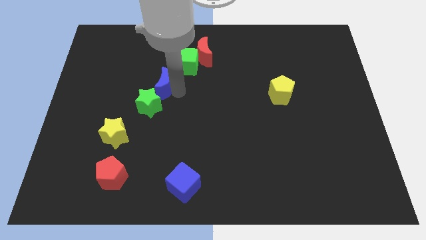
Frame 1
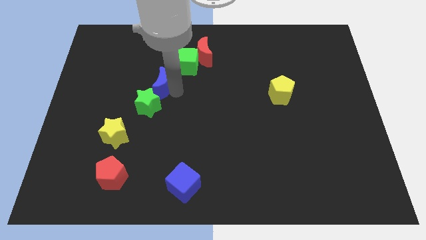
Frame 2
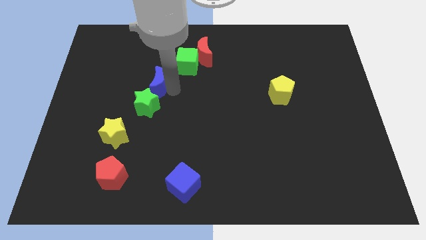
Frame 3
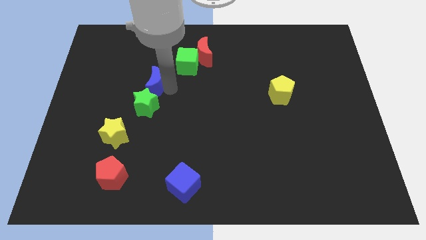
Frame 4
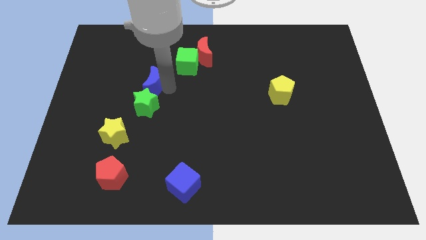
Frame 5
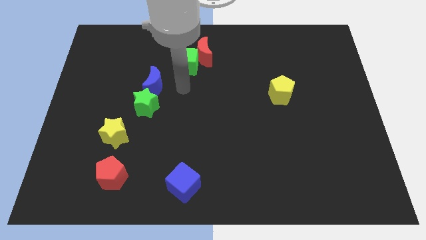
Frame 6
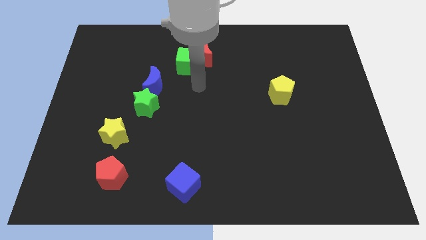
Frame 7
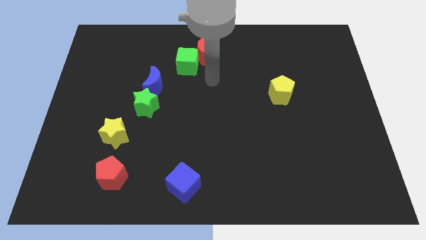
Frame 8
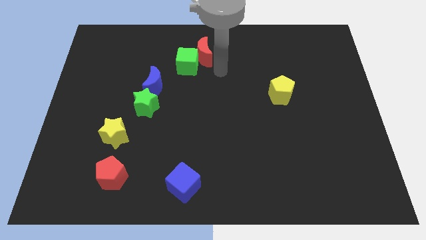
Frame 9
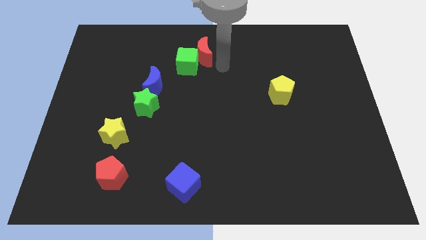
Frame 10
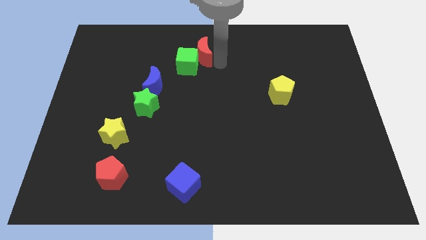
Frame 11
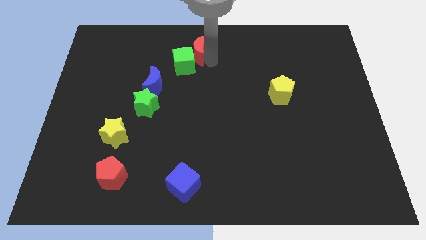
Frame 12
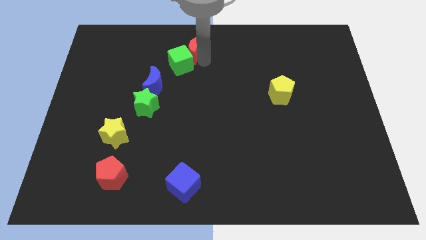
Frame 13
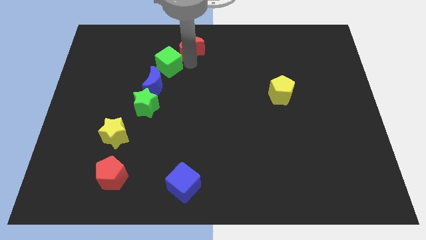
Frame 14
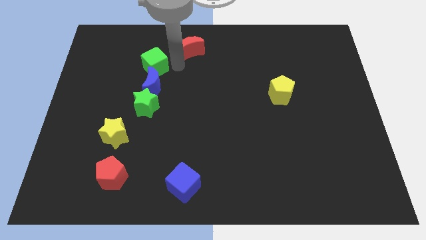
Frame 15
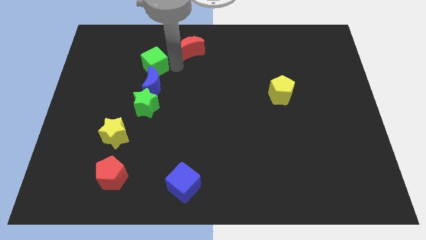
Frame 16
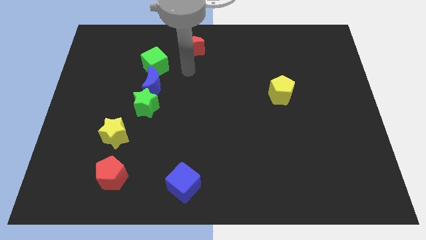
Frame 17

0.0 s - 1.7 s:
move the green cube above the blue moon

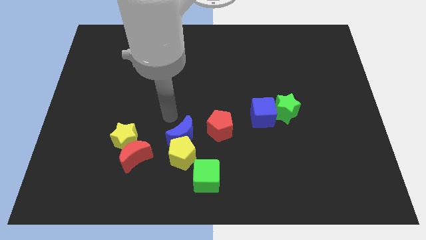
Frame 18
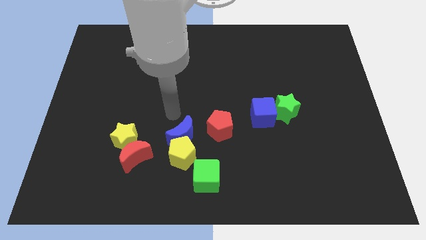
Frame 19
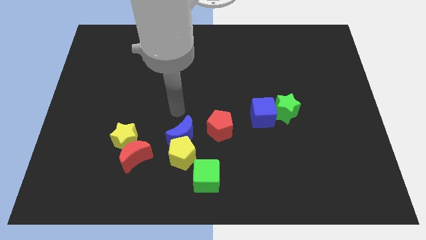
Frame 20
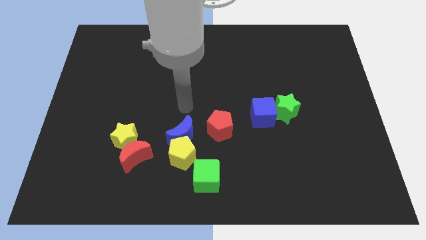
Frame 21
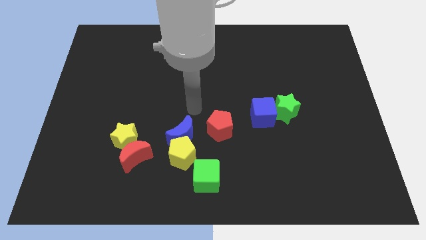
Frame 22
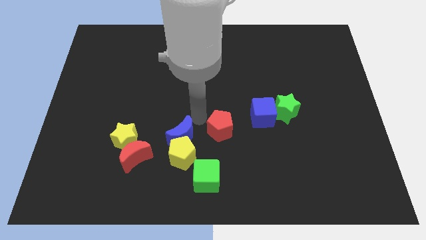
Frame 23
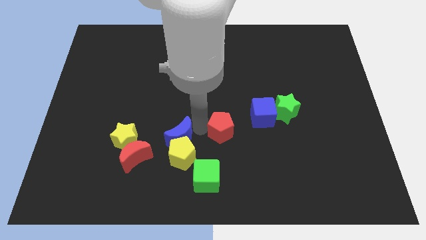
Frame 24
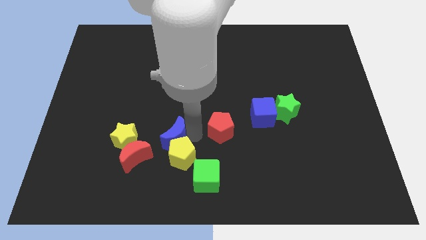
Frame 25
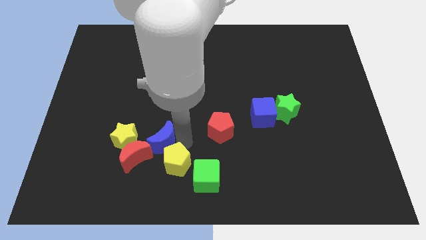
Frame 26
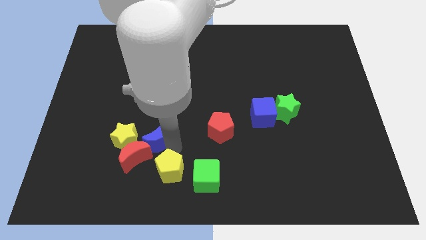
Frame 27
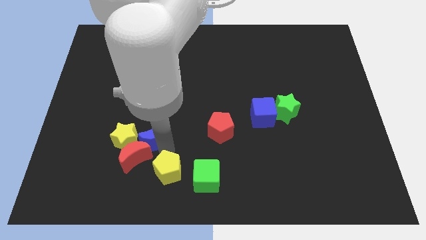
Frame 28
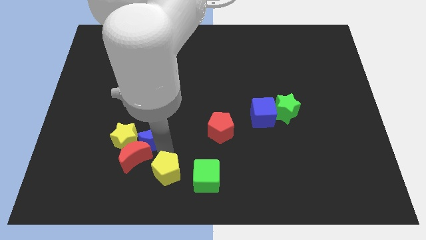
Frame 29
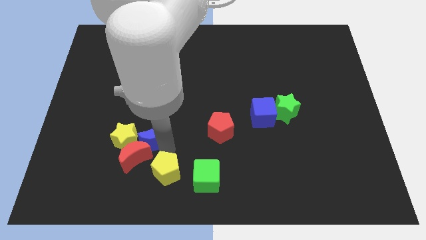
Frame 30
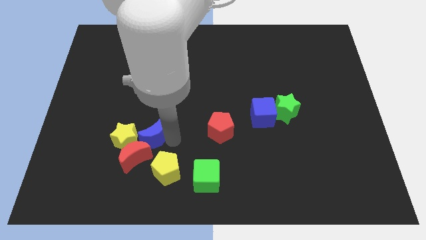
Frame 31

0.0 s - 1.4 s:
separate the blue crescent and yellow pentagon

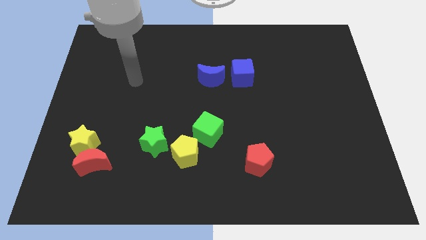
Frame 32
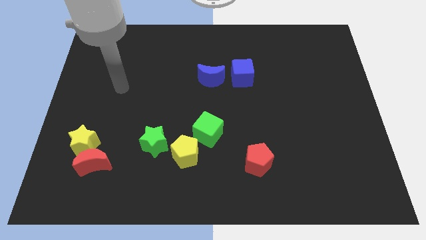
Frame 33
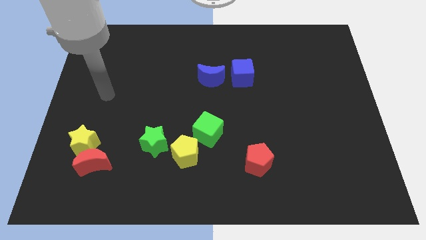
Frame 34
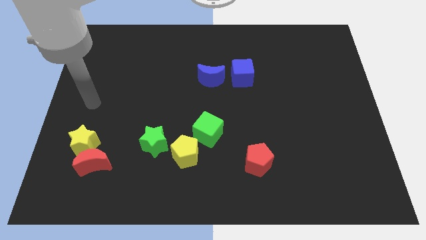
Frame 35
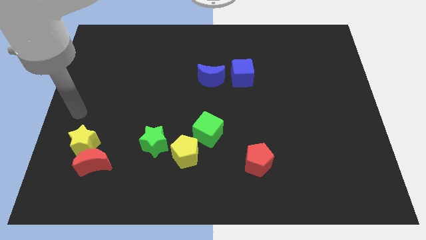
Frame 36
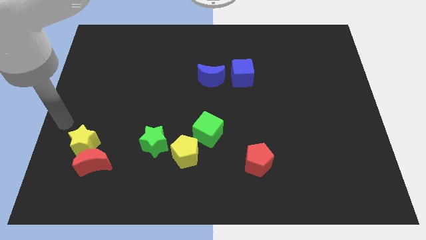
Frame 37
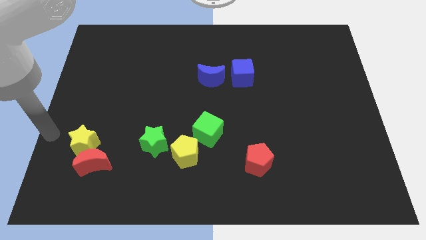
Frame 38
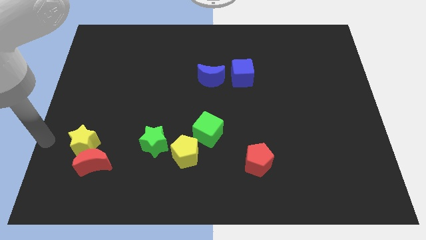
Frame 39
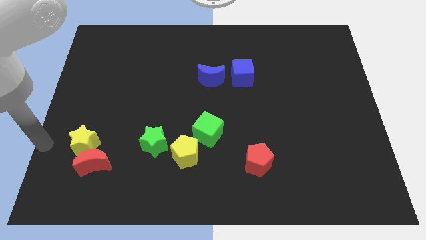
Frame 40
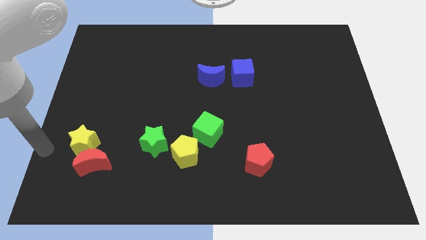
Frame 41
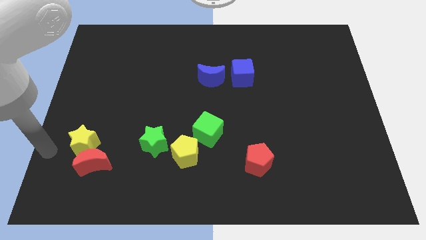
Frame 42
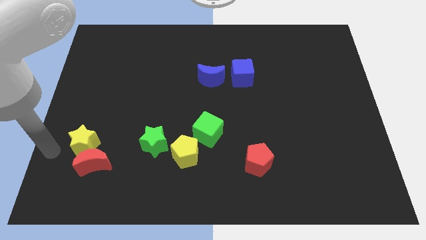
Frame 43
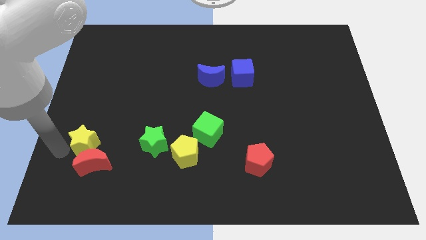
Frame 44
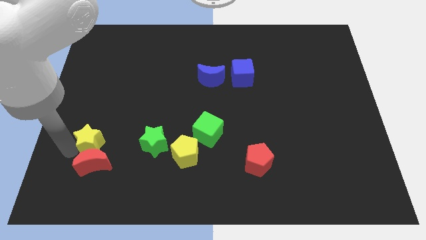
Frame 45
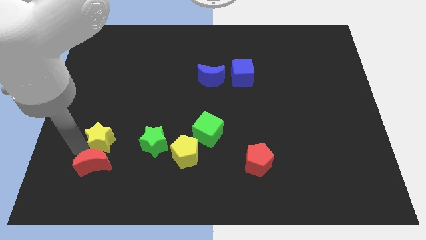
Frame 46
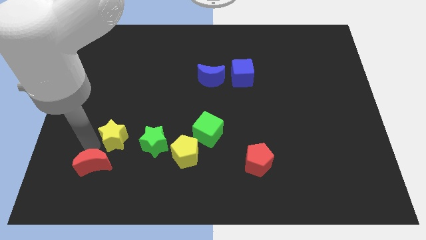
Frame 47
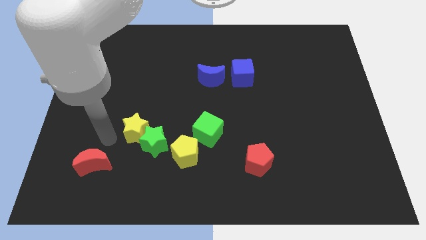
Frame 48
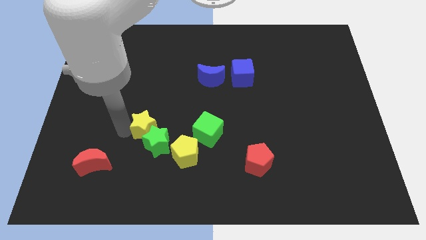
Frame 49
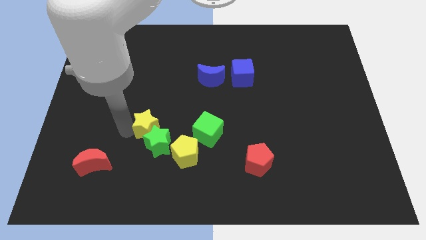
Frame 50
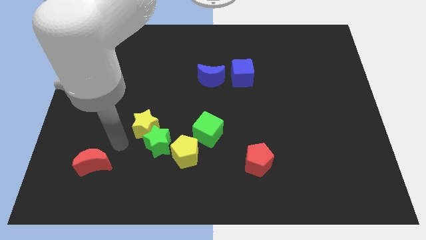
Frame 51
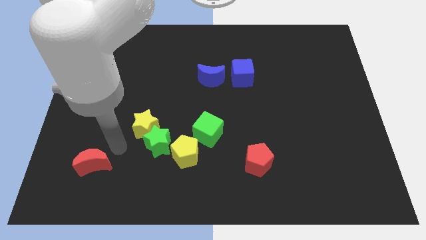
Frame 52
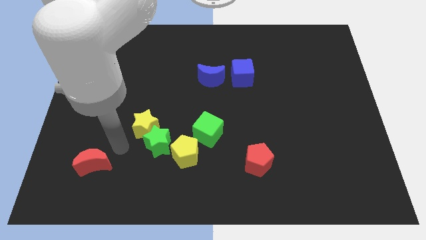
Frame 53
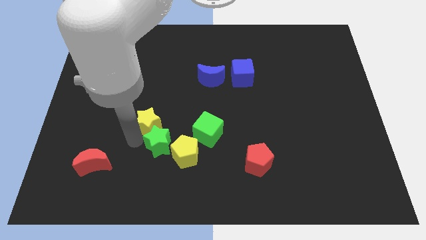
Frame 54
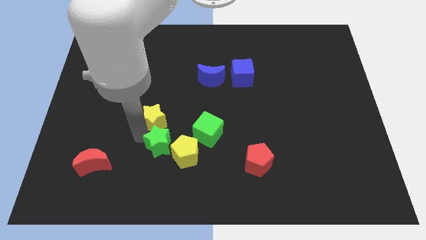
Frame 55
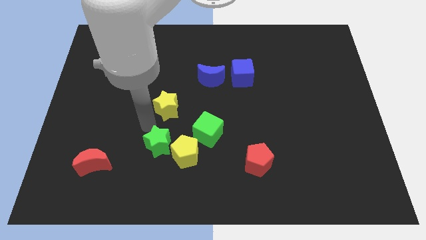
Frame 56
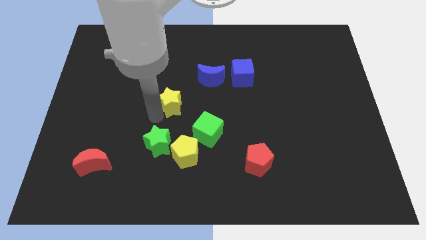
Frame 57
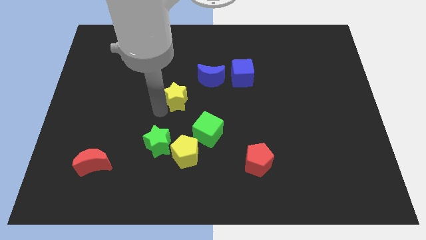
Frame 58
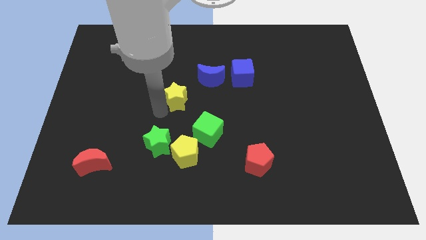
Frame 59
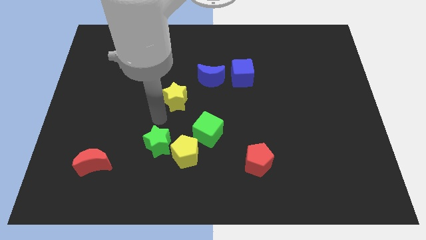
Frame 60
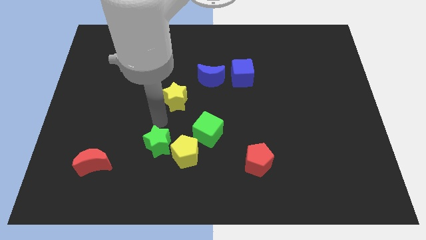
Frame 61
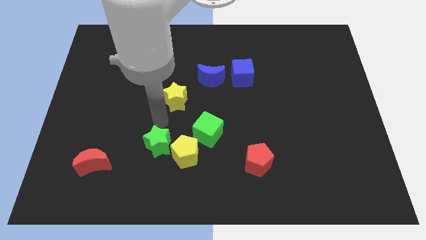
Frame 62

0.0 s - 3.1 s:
separate yellow star from red moon

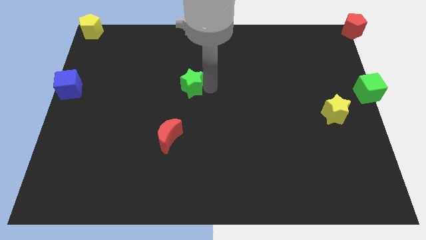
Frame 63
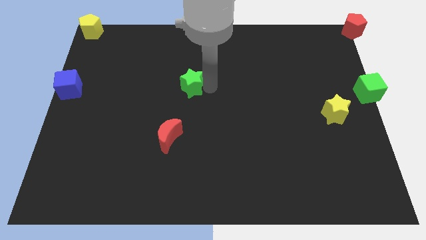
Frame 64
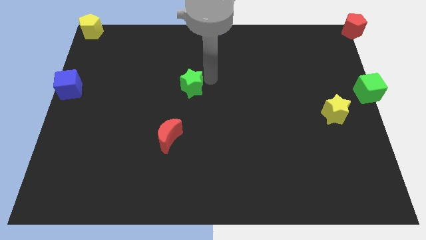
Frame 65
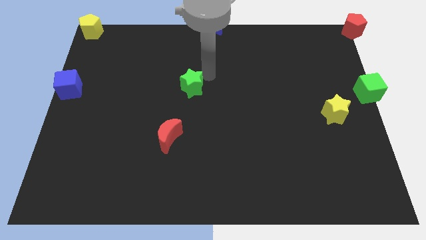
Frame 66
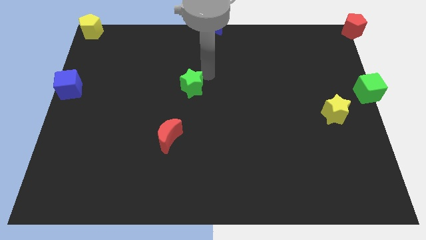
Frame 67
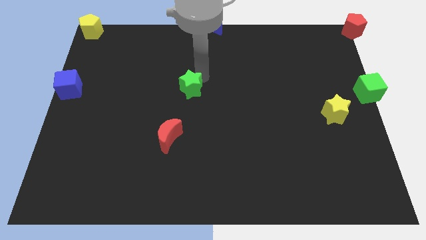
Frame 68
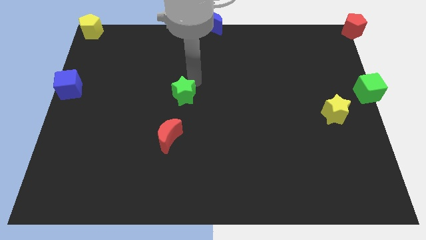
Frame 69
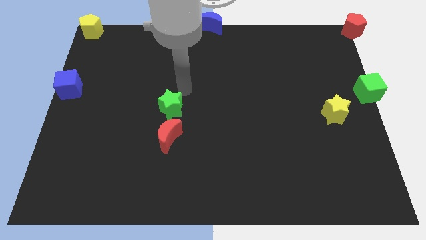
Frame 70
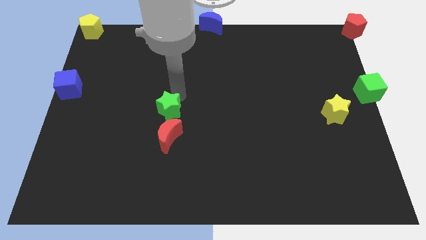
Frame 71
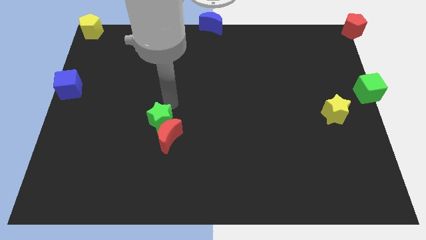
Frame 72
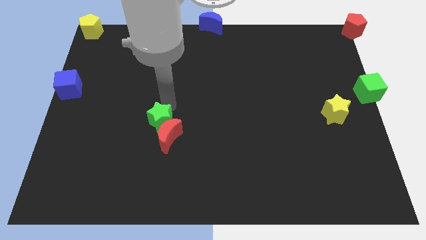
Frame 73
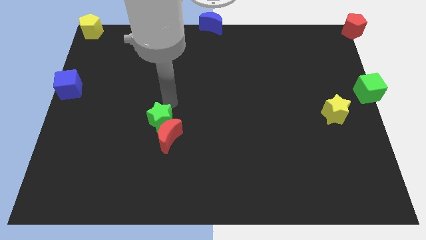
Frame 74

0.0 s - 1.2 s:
push the green star into red moon

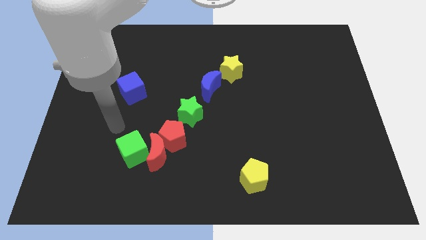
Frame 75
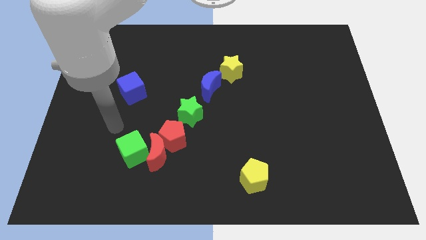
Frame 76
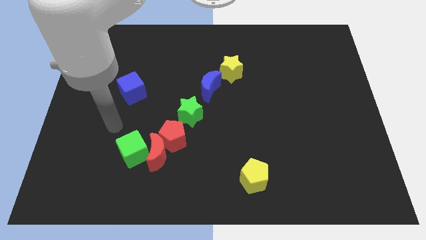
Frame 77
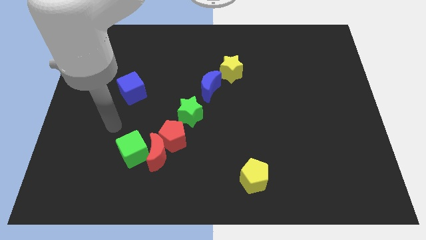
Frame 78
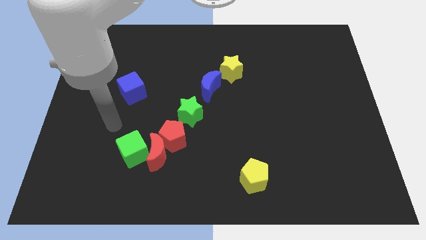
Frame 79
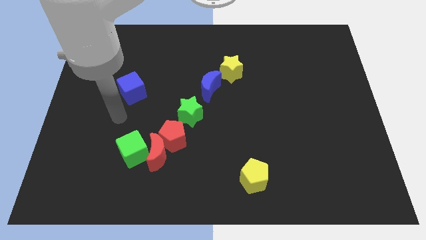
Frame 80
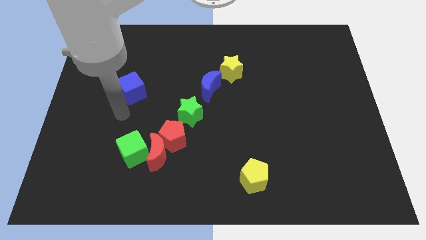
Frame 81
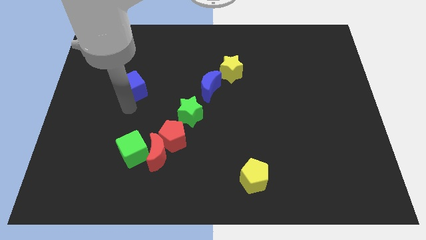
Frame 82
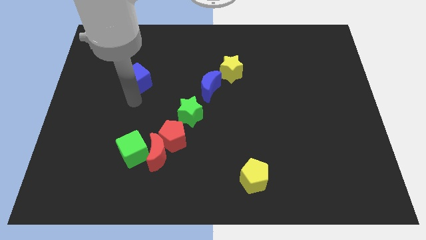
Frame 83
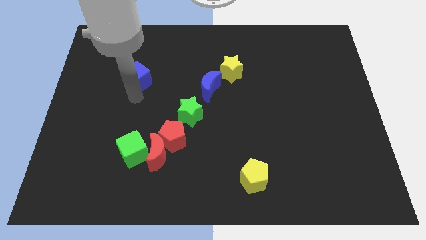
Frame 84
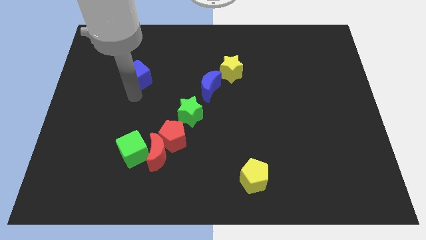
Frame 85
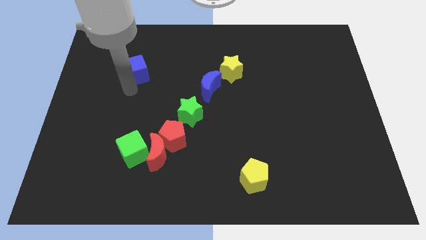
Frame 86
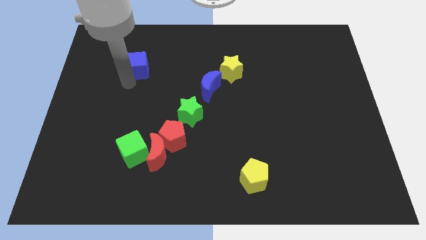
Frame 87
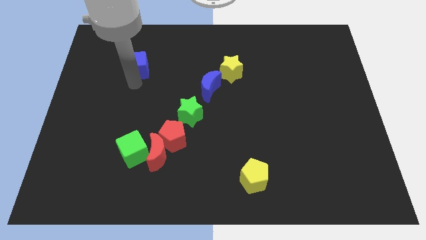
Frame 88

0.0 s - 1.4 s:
move blue cube upwards

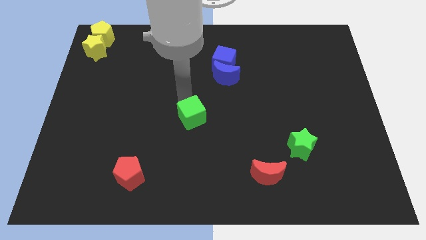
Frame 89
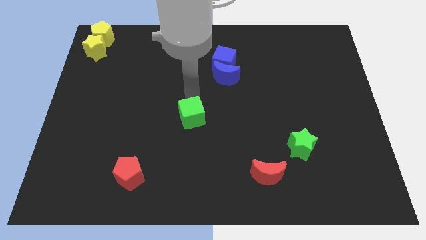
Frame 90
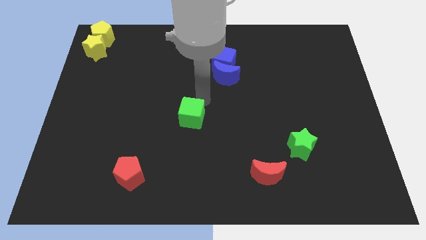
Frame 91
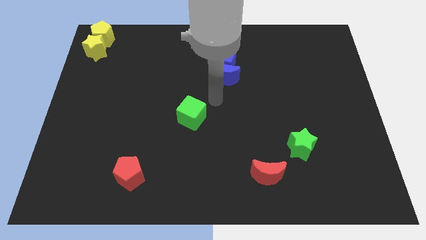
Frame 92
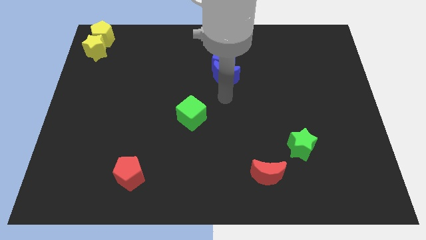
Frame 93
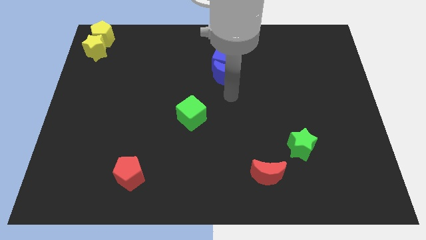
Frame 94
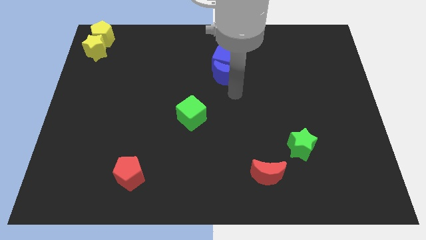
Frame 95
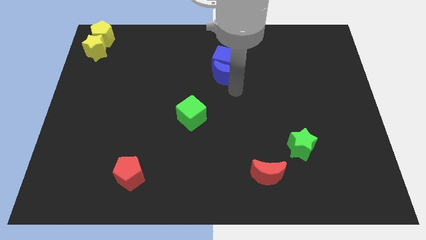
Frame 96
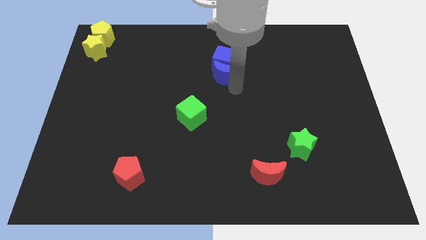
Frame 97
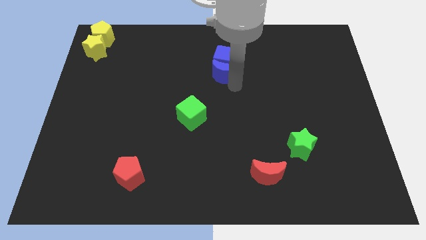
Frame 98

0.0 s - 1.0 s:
slightly push the green cube on the board
